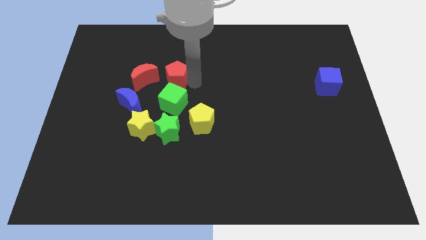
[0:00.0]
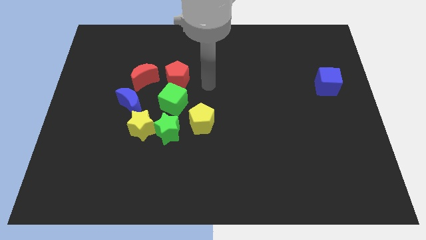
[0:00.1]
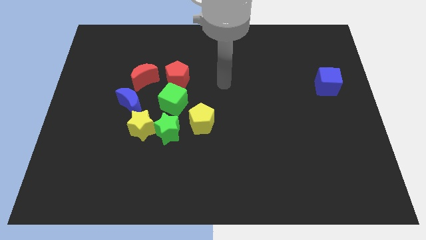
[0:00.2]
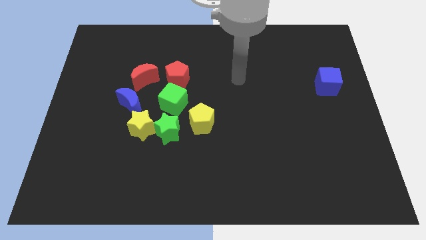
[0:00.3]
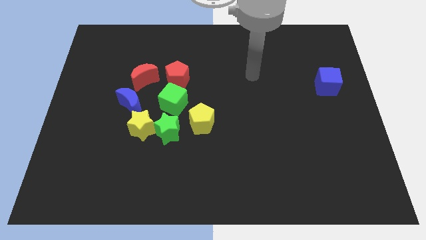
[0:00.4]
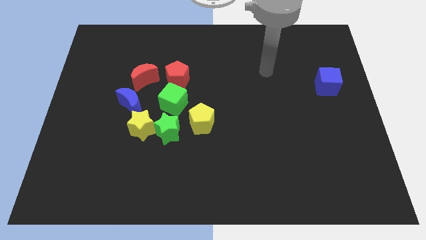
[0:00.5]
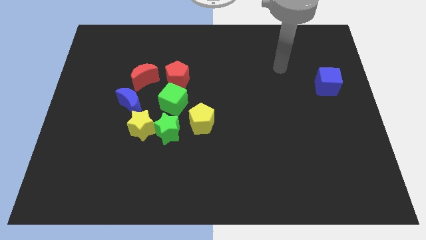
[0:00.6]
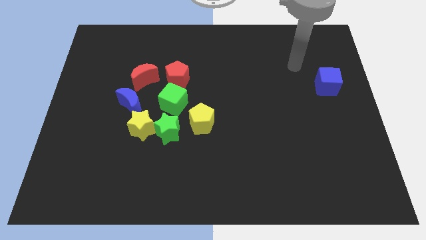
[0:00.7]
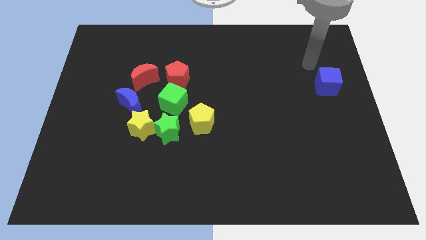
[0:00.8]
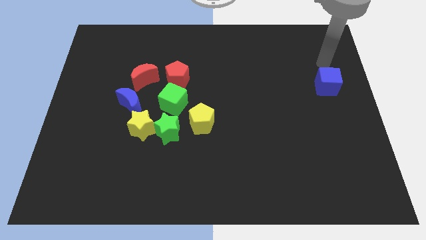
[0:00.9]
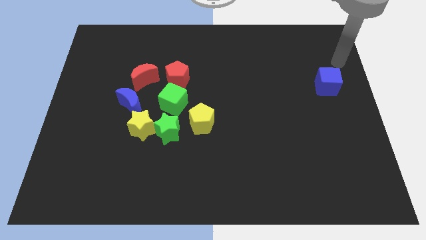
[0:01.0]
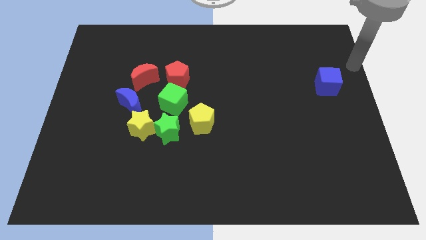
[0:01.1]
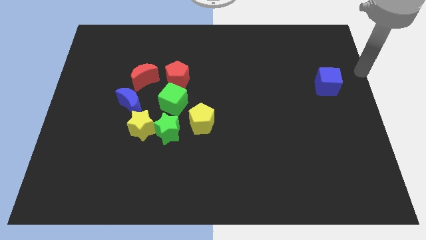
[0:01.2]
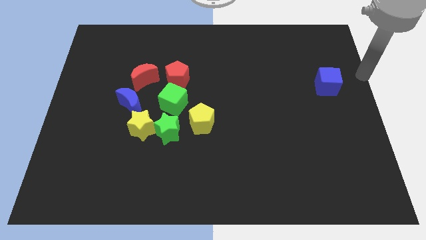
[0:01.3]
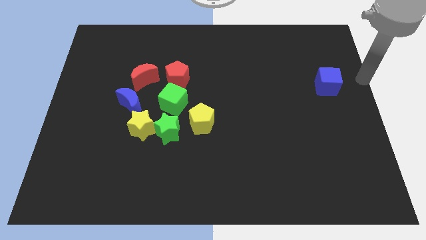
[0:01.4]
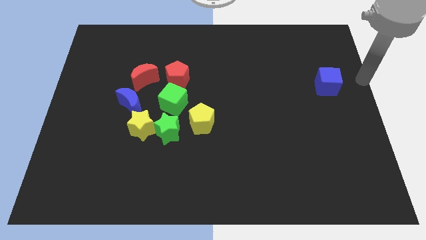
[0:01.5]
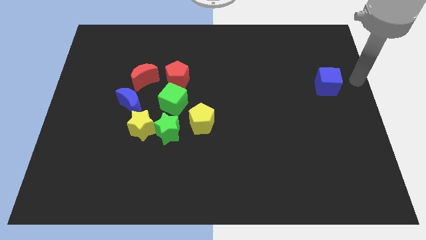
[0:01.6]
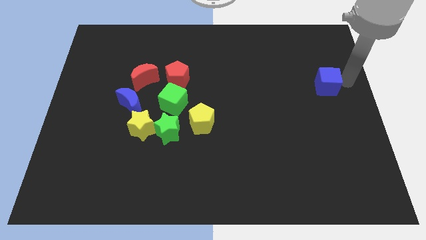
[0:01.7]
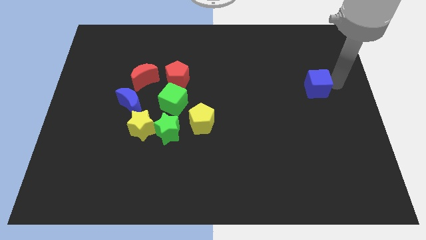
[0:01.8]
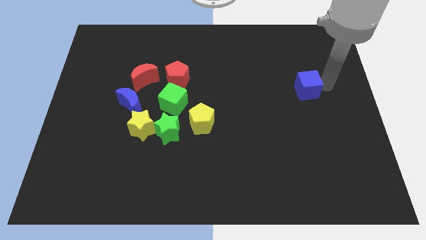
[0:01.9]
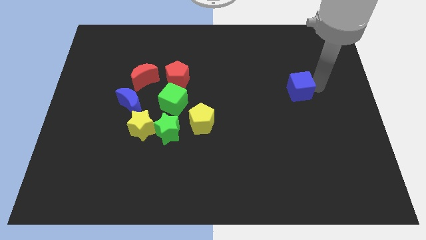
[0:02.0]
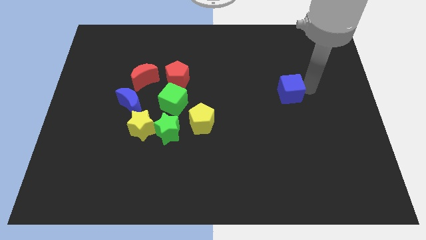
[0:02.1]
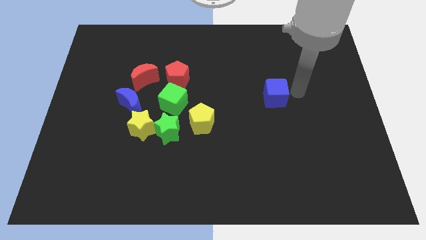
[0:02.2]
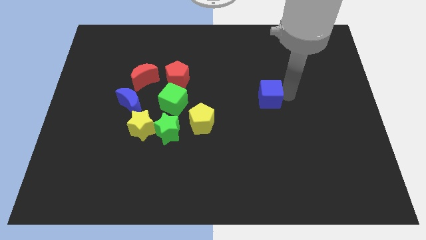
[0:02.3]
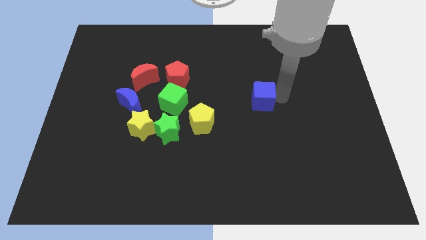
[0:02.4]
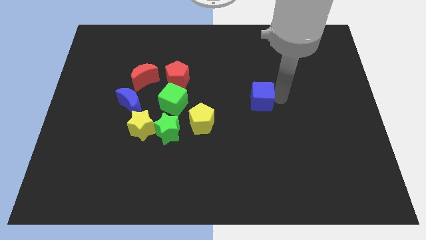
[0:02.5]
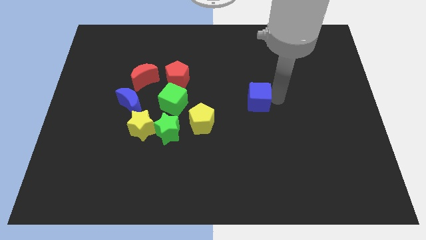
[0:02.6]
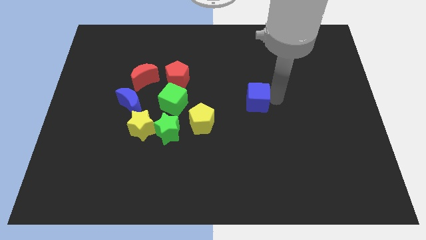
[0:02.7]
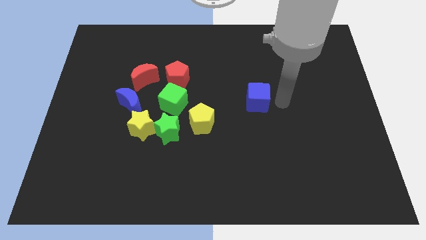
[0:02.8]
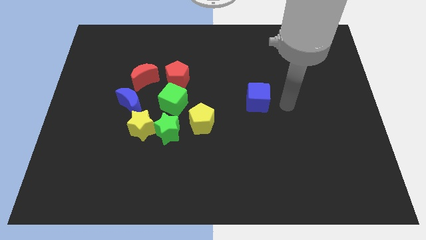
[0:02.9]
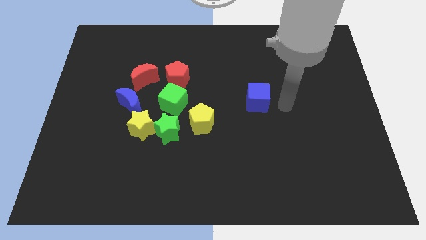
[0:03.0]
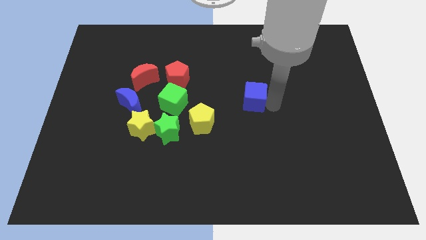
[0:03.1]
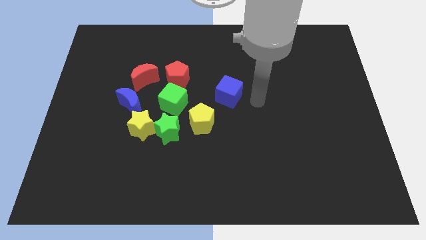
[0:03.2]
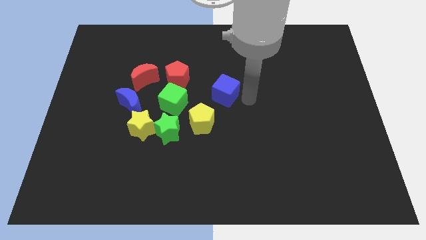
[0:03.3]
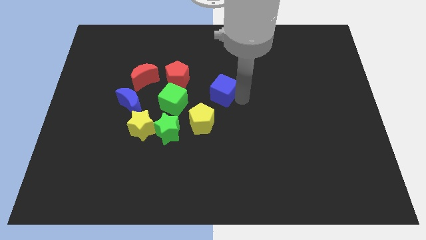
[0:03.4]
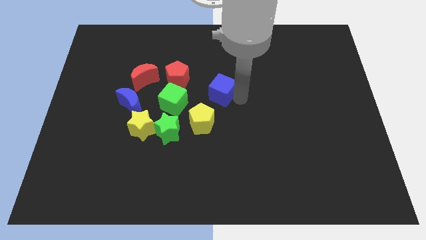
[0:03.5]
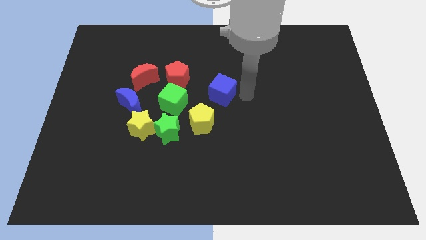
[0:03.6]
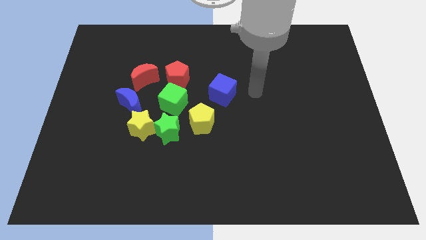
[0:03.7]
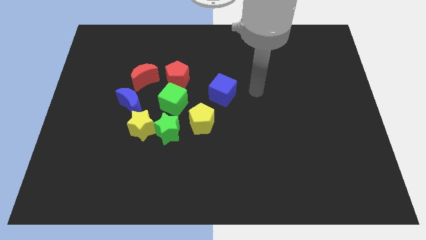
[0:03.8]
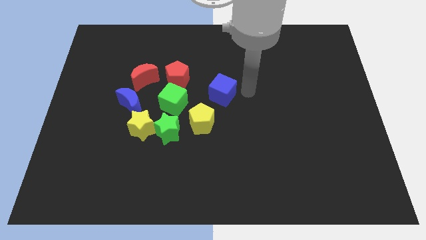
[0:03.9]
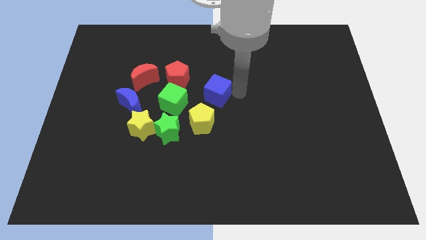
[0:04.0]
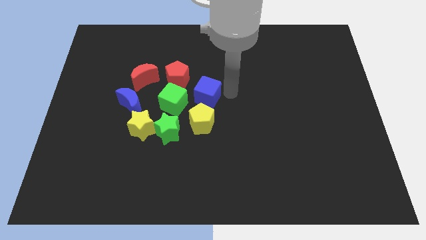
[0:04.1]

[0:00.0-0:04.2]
place the blue cube to the right side of green cube

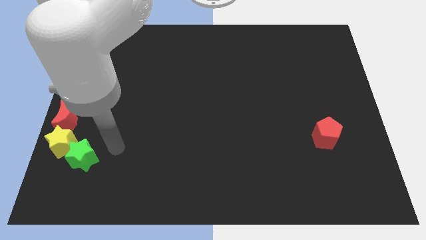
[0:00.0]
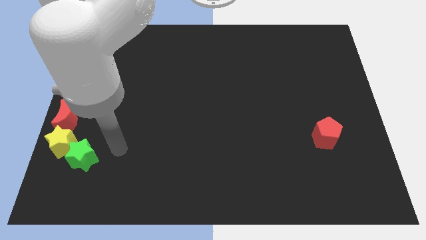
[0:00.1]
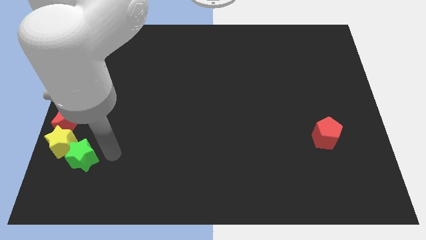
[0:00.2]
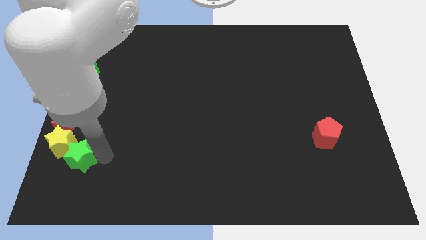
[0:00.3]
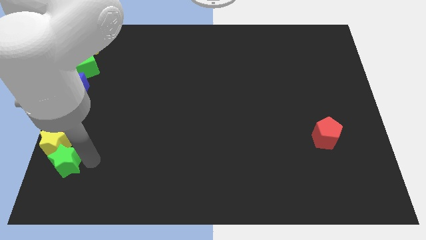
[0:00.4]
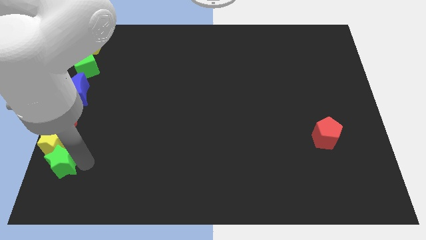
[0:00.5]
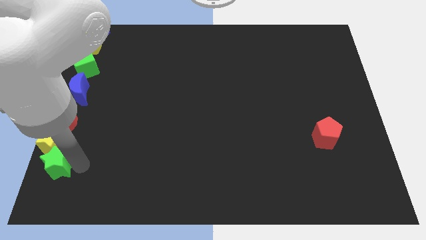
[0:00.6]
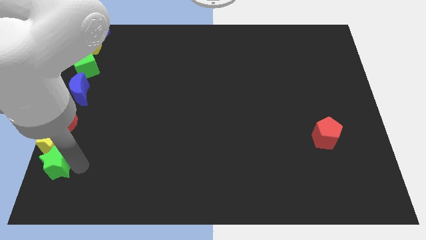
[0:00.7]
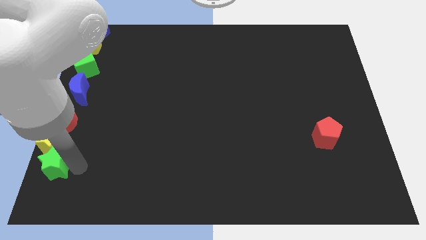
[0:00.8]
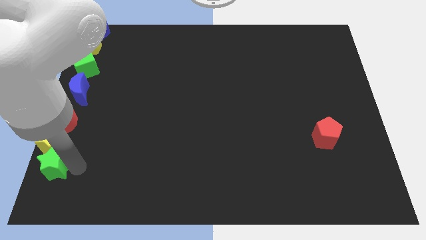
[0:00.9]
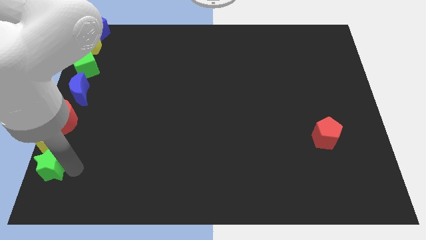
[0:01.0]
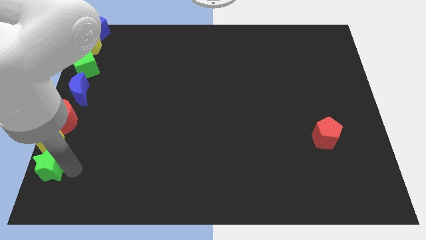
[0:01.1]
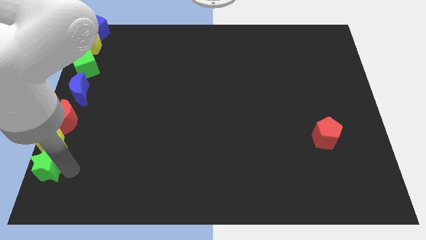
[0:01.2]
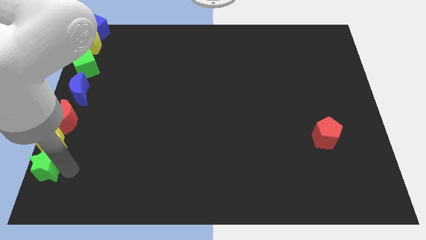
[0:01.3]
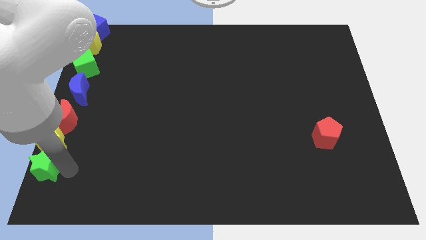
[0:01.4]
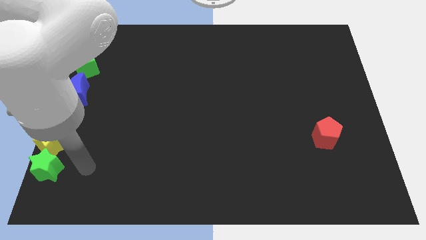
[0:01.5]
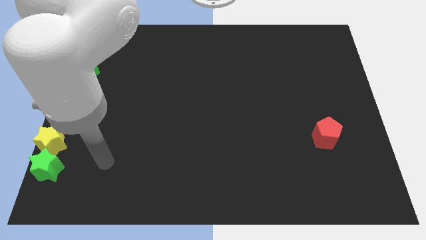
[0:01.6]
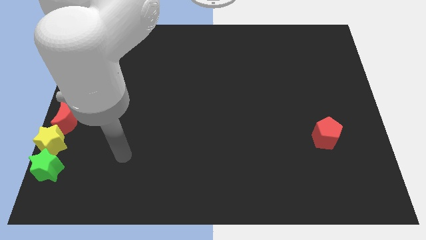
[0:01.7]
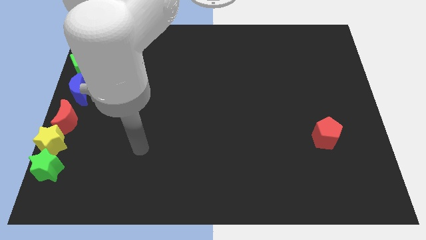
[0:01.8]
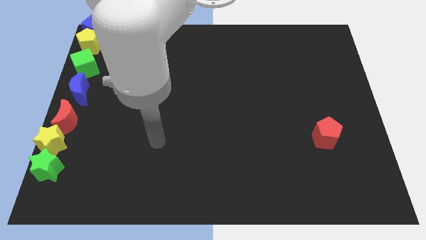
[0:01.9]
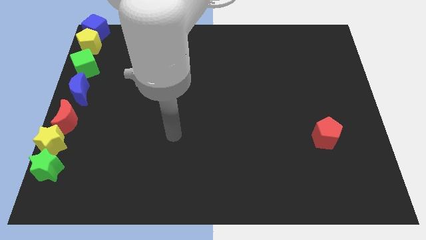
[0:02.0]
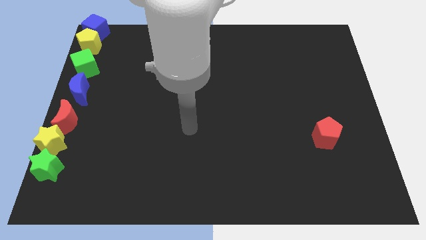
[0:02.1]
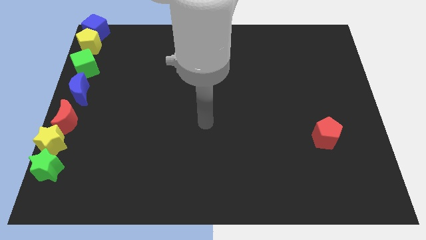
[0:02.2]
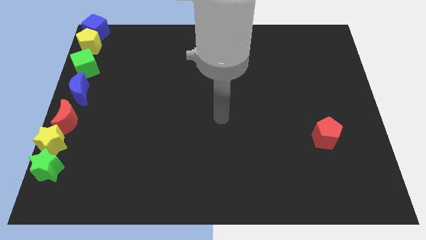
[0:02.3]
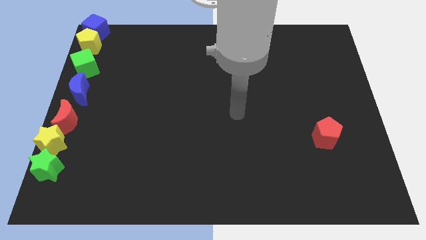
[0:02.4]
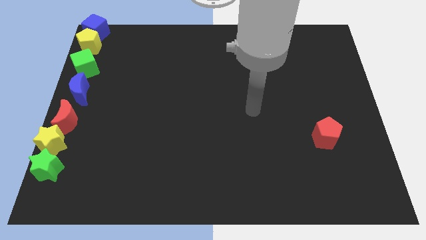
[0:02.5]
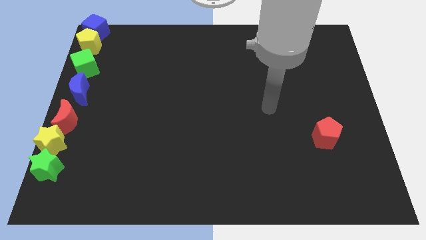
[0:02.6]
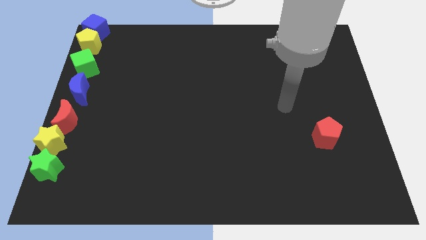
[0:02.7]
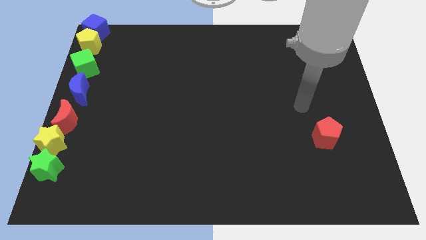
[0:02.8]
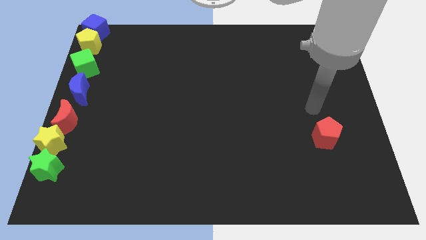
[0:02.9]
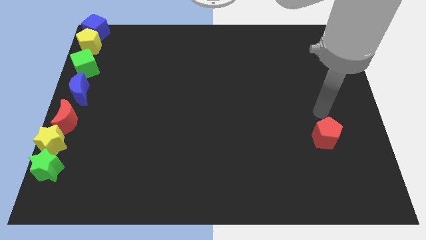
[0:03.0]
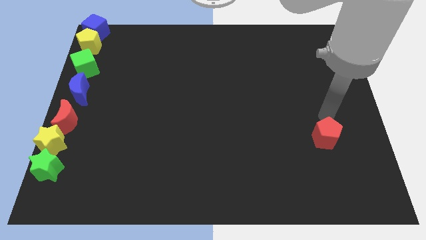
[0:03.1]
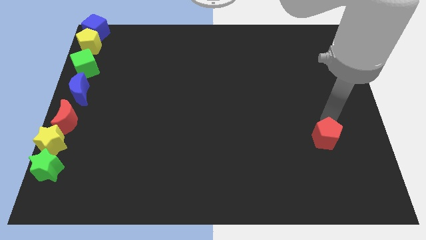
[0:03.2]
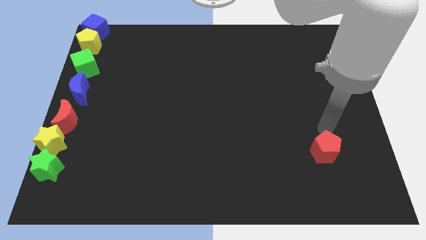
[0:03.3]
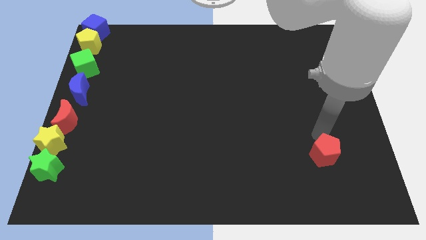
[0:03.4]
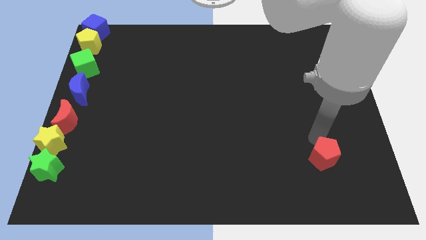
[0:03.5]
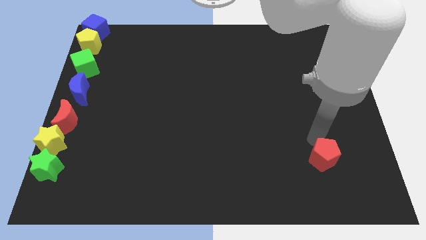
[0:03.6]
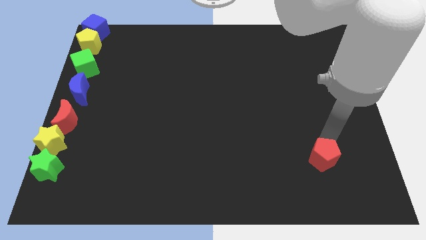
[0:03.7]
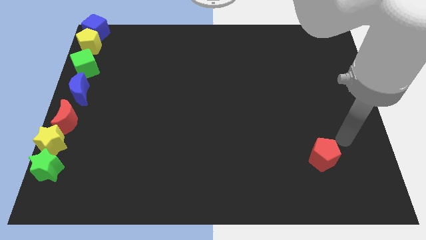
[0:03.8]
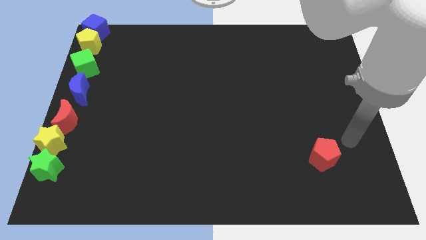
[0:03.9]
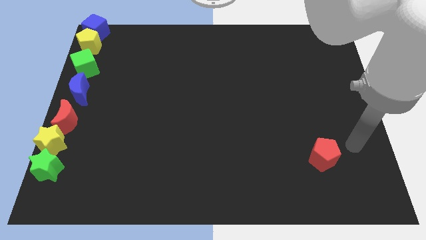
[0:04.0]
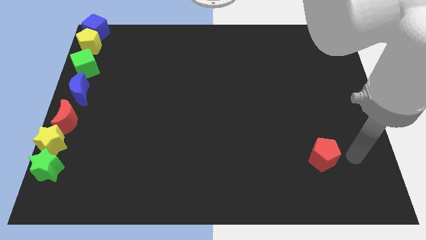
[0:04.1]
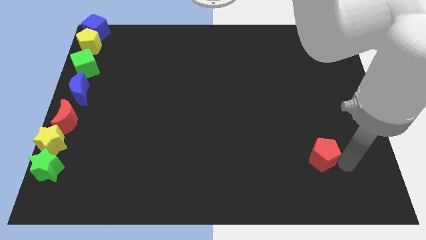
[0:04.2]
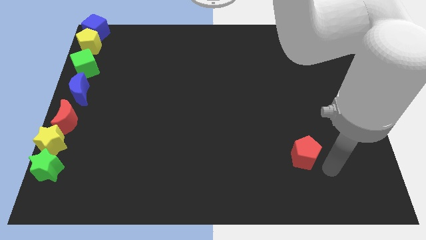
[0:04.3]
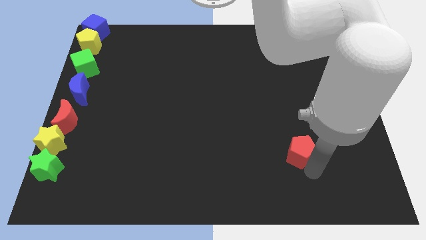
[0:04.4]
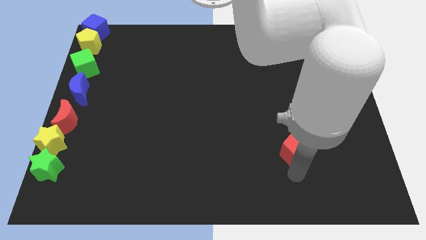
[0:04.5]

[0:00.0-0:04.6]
place the green star below the yellow star

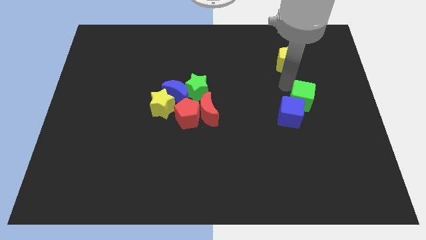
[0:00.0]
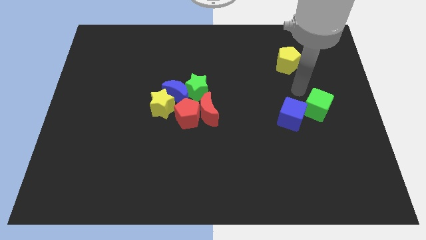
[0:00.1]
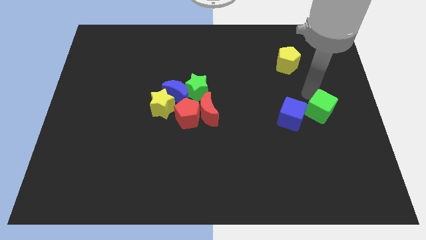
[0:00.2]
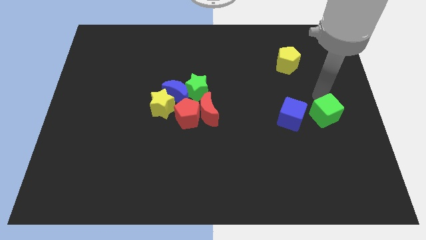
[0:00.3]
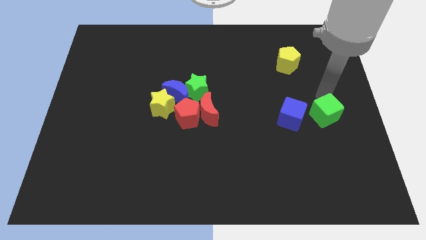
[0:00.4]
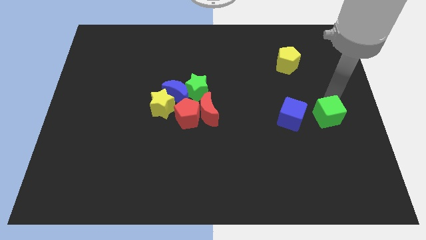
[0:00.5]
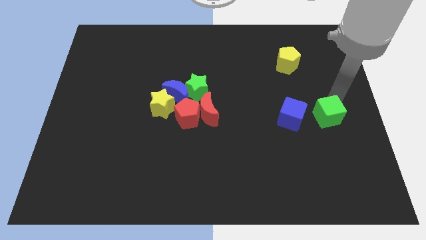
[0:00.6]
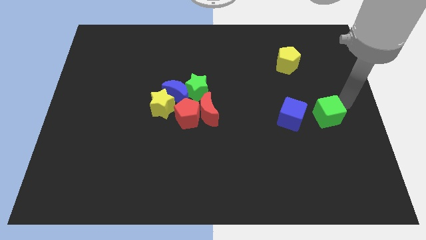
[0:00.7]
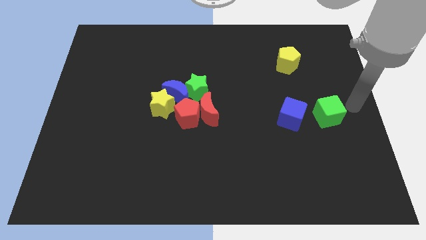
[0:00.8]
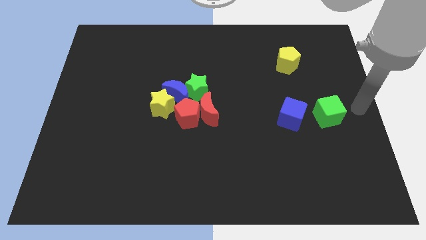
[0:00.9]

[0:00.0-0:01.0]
separate green cube from blue cube
